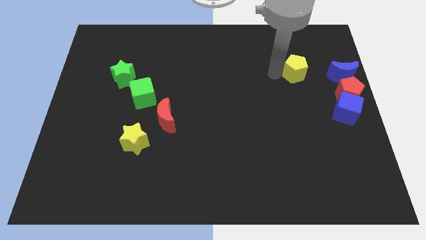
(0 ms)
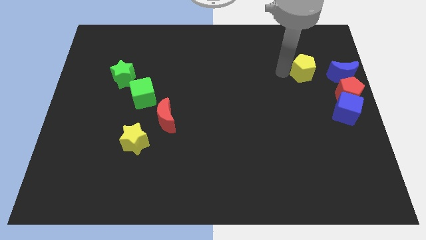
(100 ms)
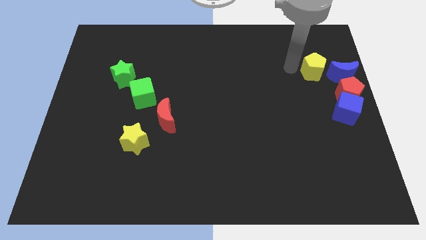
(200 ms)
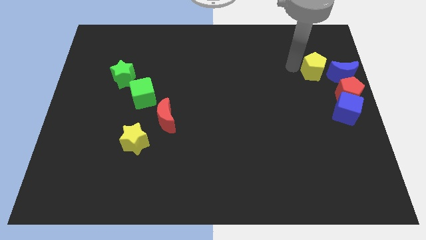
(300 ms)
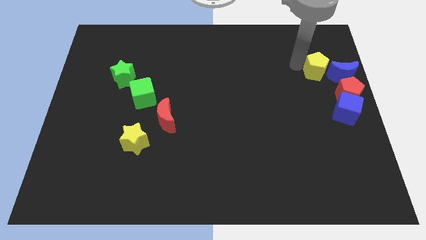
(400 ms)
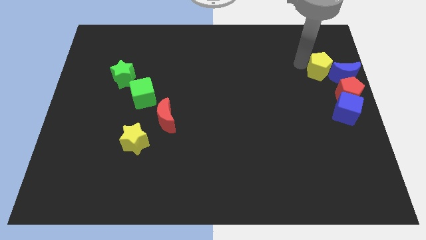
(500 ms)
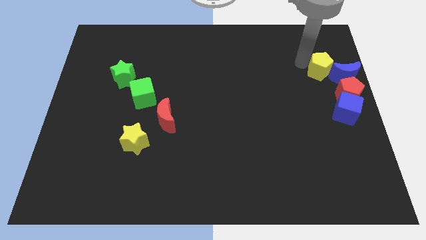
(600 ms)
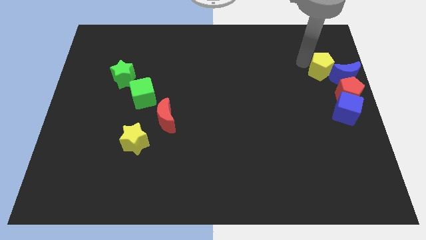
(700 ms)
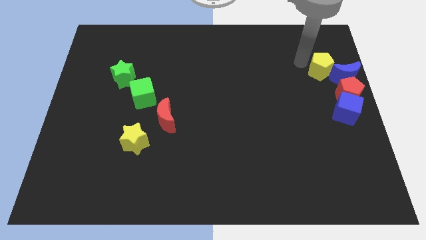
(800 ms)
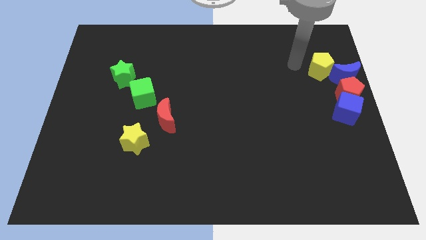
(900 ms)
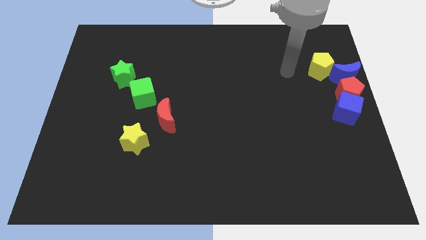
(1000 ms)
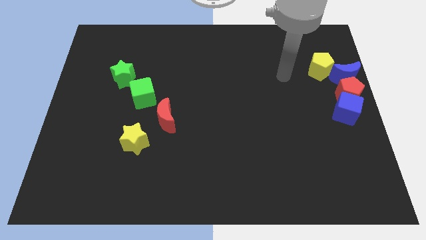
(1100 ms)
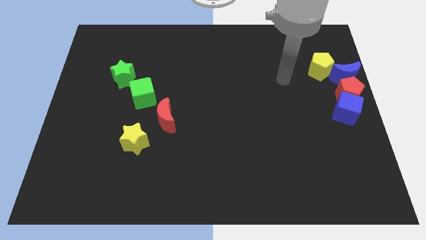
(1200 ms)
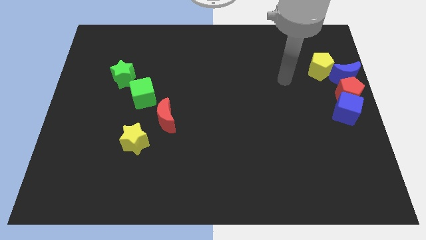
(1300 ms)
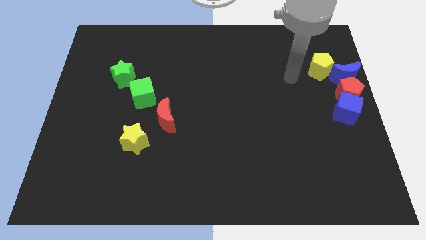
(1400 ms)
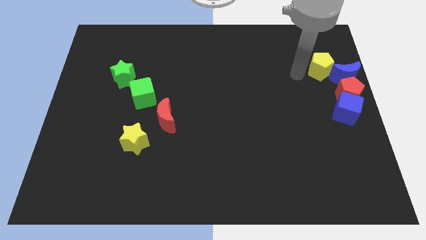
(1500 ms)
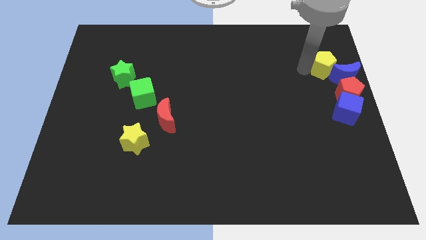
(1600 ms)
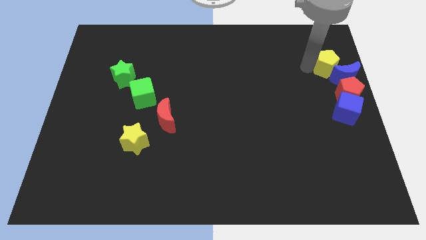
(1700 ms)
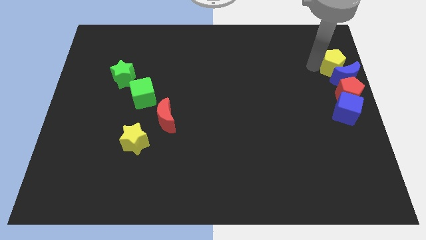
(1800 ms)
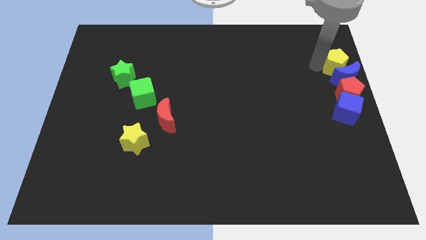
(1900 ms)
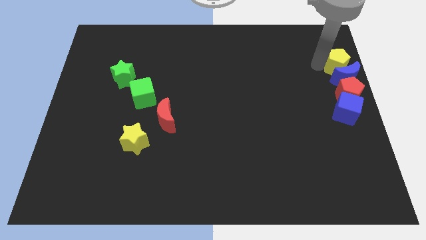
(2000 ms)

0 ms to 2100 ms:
push the yellow pentagon to the top side of the blue crescent

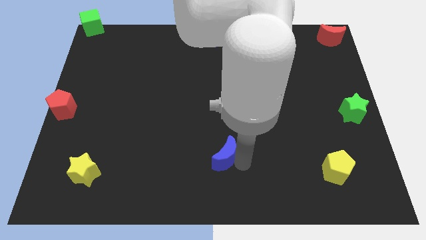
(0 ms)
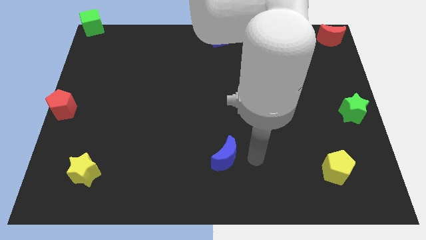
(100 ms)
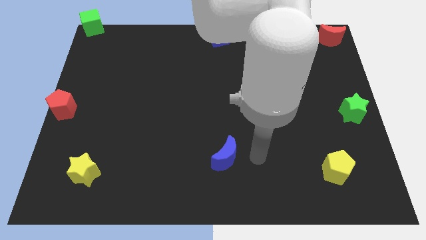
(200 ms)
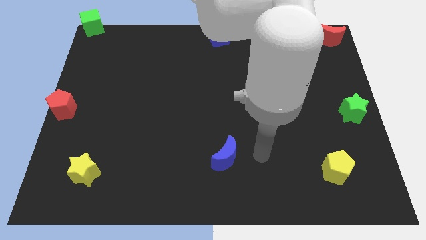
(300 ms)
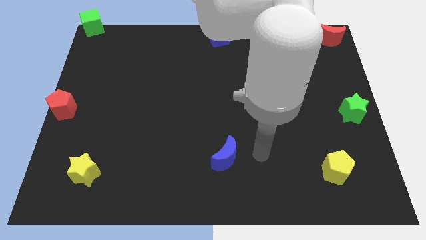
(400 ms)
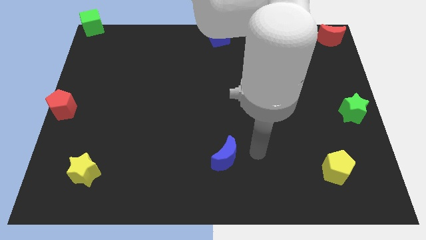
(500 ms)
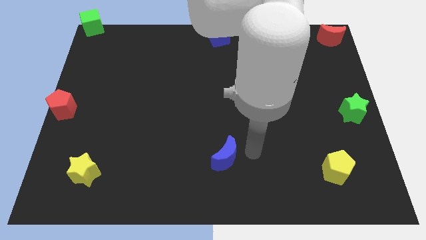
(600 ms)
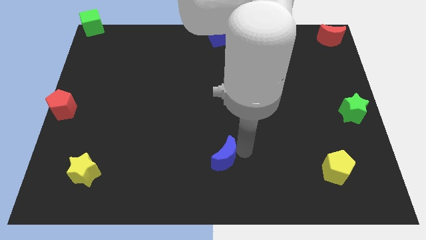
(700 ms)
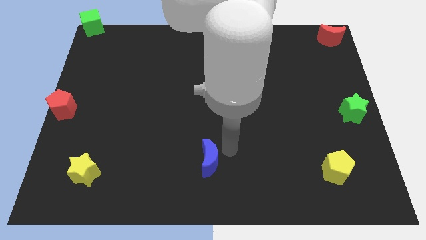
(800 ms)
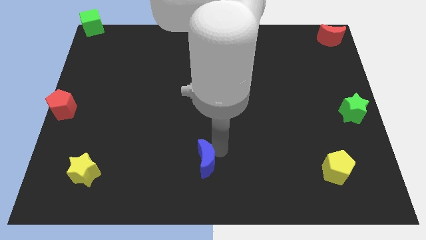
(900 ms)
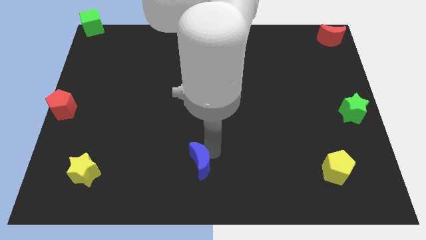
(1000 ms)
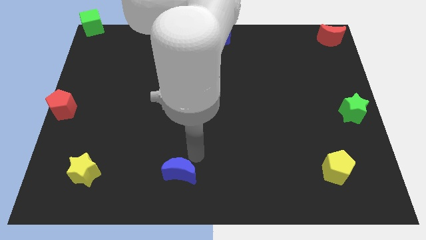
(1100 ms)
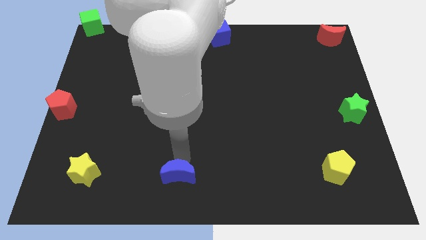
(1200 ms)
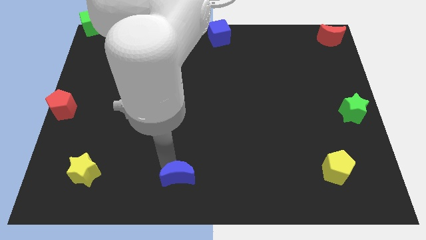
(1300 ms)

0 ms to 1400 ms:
push the blue crescent horizontally to the right side of the yellow star

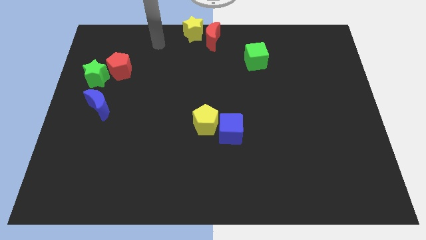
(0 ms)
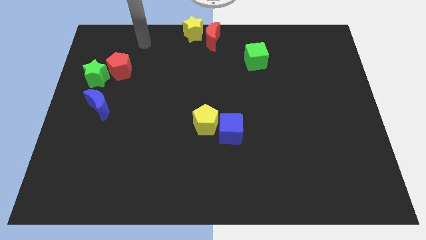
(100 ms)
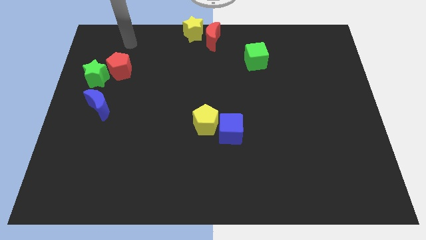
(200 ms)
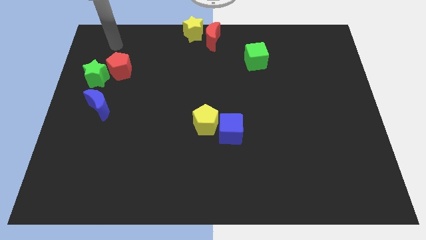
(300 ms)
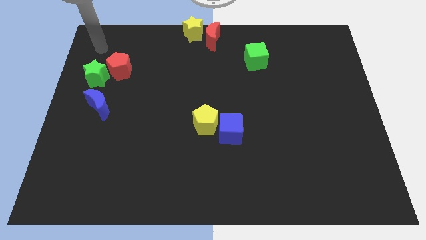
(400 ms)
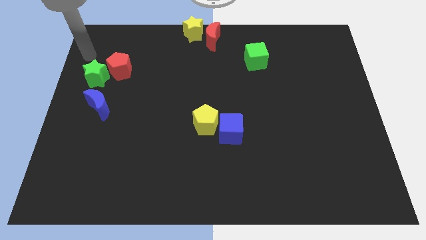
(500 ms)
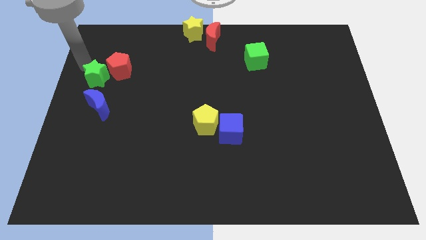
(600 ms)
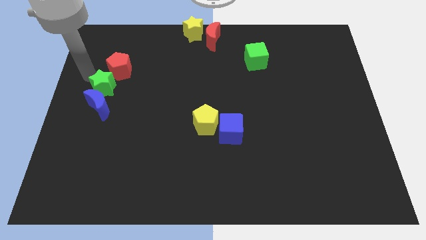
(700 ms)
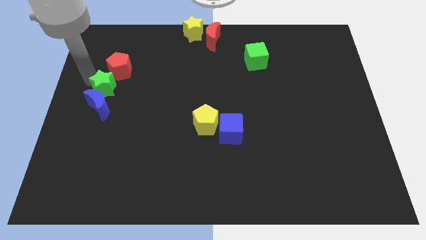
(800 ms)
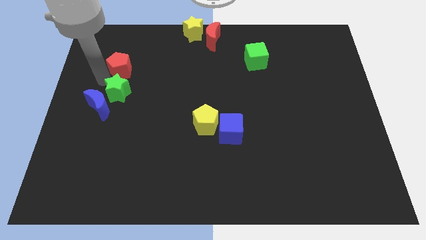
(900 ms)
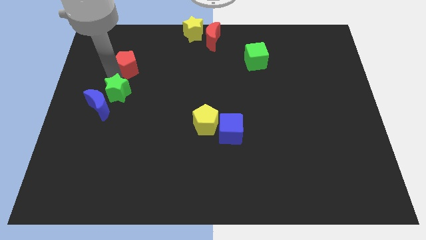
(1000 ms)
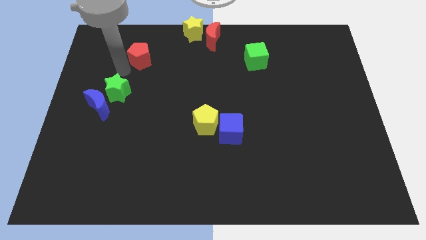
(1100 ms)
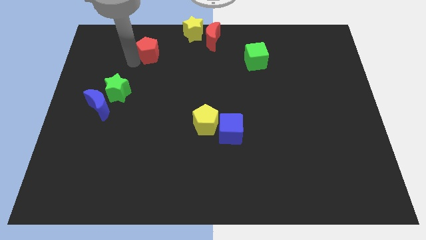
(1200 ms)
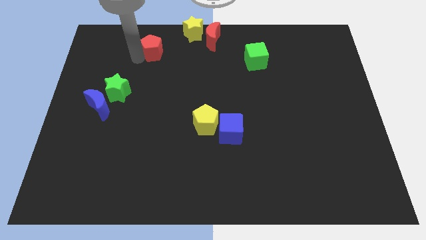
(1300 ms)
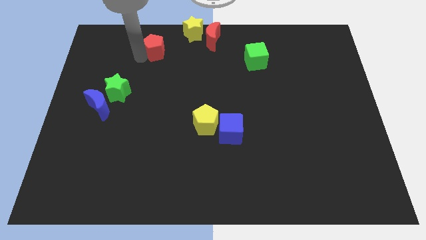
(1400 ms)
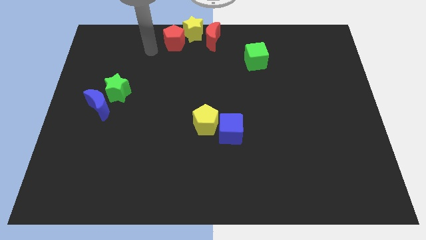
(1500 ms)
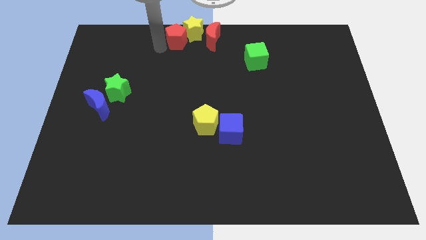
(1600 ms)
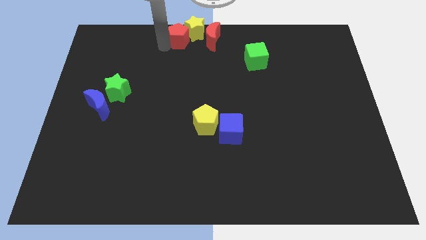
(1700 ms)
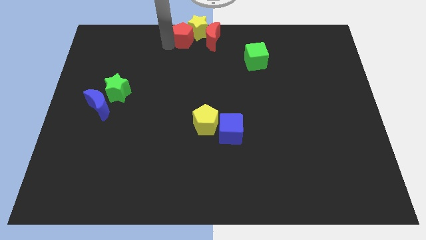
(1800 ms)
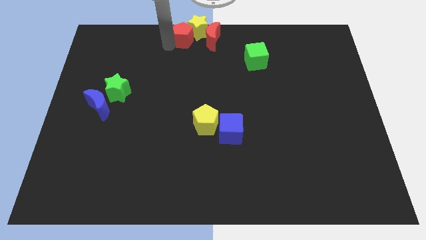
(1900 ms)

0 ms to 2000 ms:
separate the red pentagon from green star

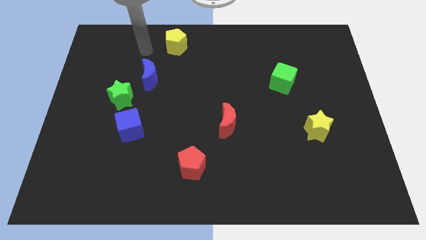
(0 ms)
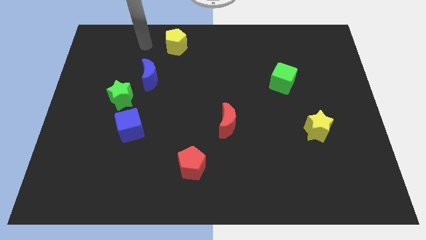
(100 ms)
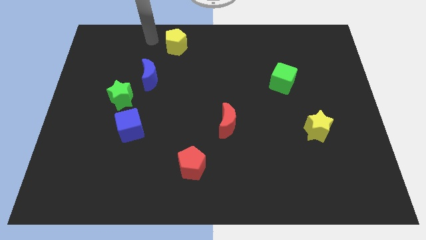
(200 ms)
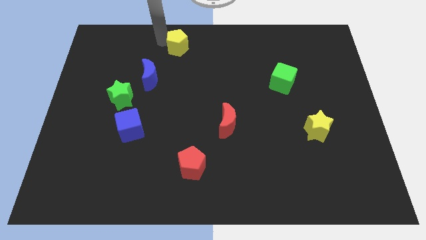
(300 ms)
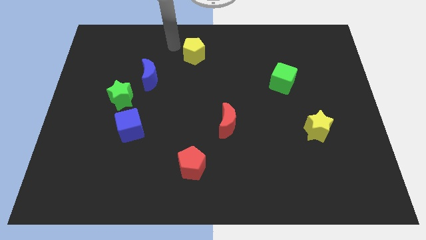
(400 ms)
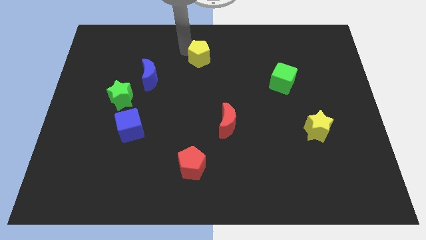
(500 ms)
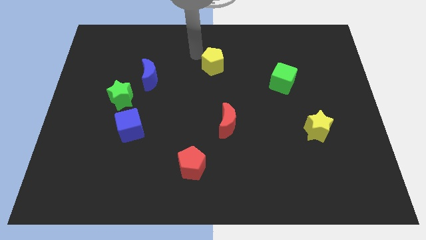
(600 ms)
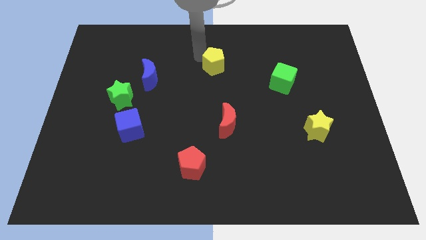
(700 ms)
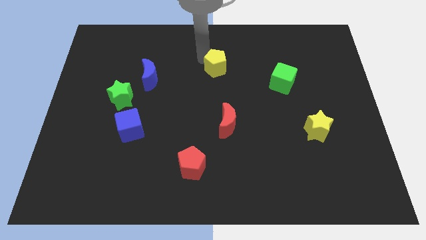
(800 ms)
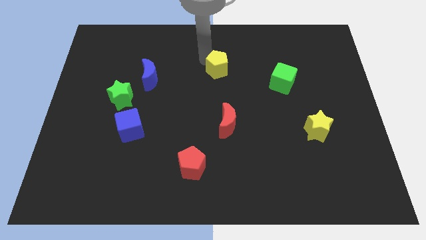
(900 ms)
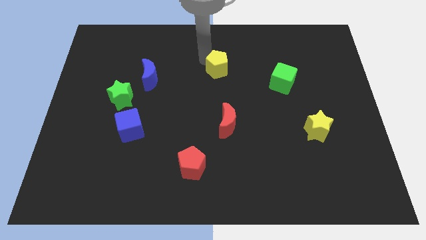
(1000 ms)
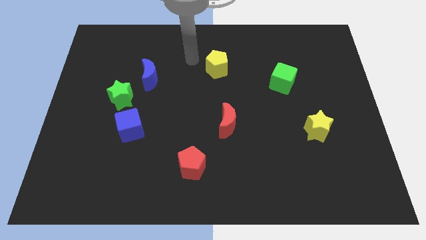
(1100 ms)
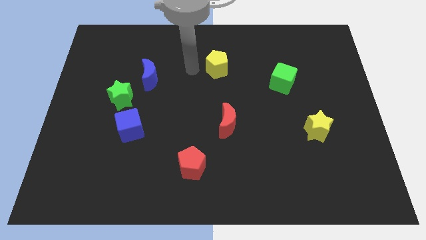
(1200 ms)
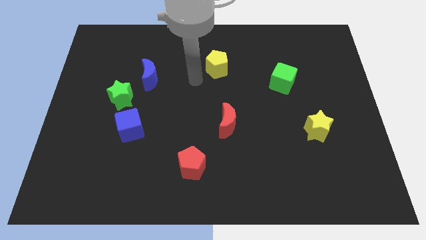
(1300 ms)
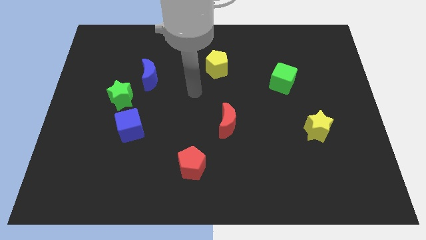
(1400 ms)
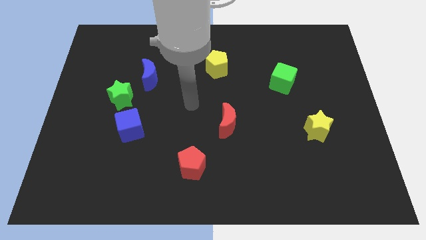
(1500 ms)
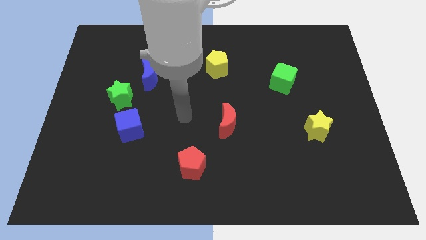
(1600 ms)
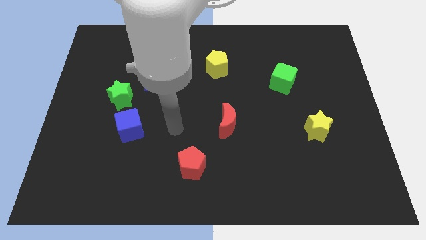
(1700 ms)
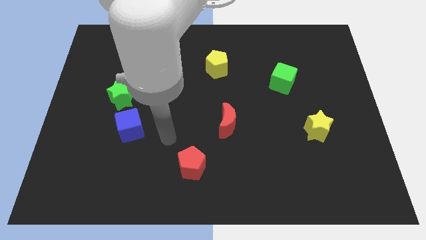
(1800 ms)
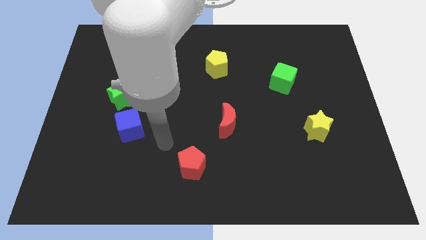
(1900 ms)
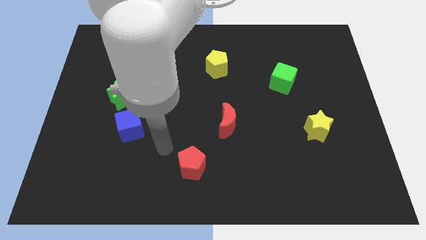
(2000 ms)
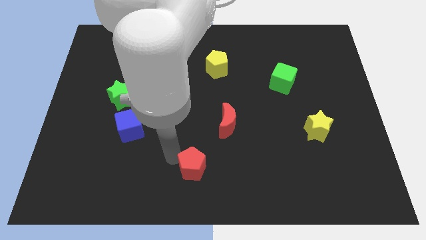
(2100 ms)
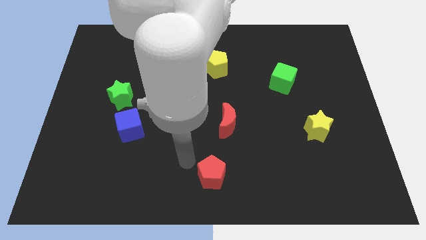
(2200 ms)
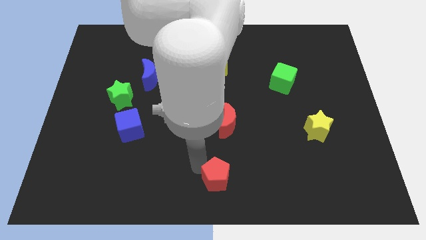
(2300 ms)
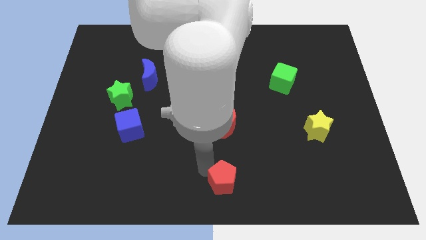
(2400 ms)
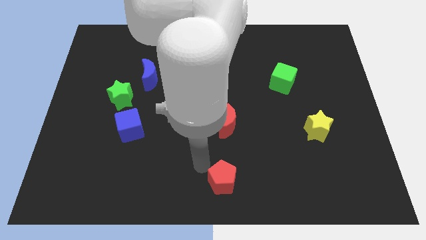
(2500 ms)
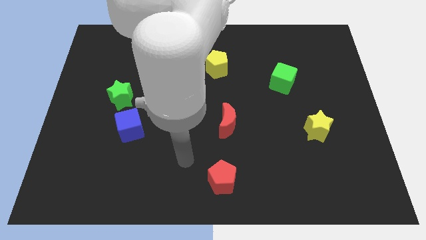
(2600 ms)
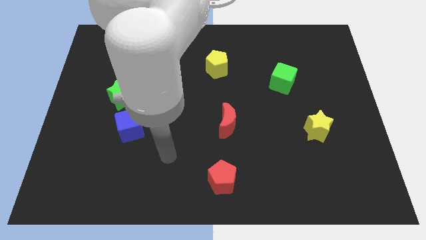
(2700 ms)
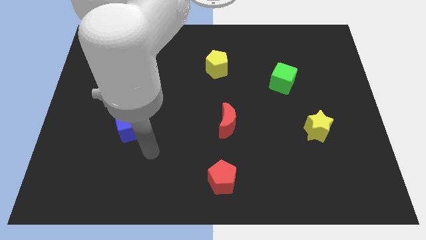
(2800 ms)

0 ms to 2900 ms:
move the red pentagon towards bottom center

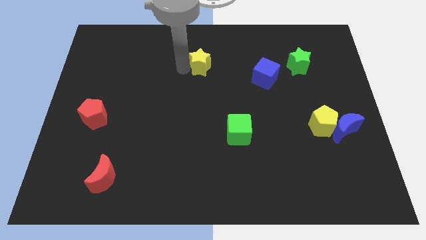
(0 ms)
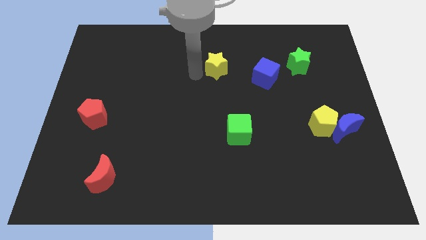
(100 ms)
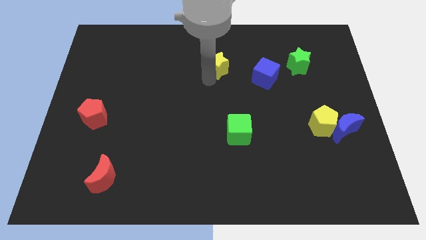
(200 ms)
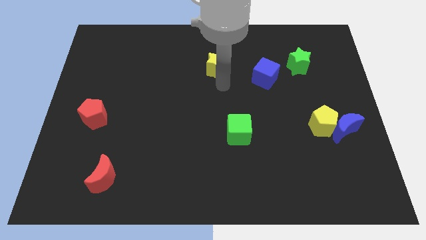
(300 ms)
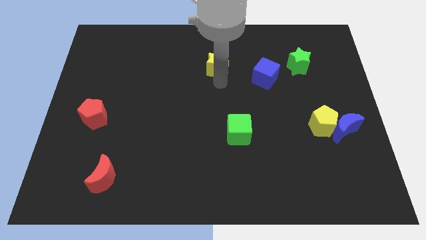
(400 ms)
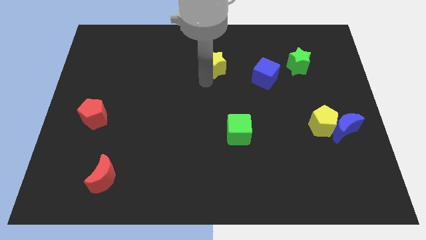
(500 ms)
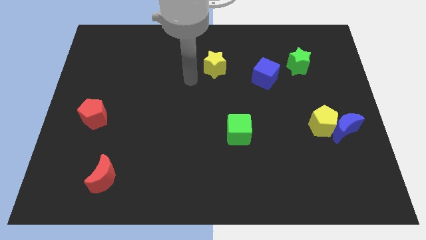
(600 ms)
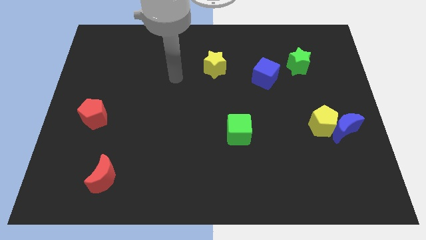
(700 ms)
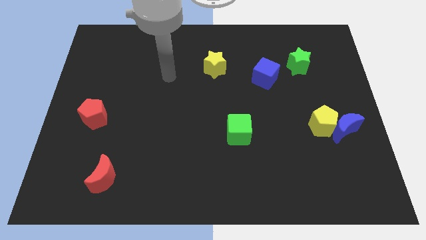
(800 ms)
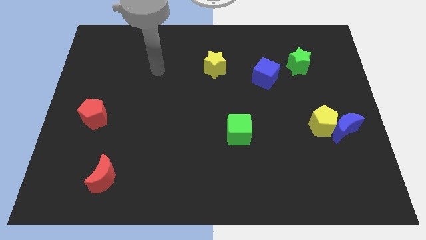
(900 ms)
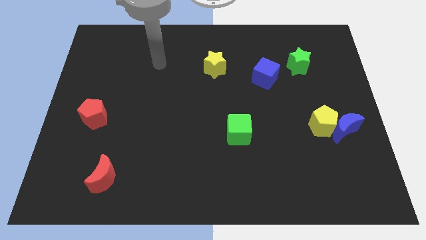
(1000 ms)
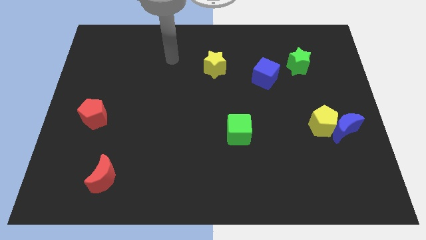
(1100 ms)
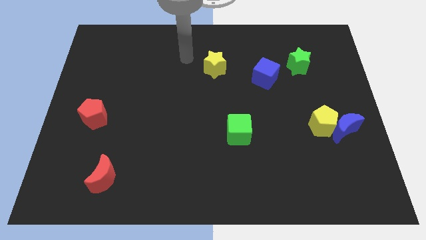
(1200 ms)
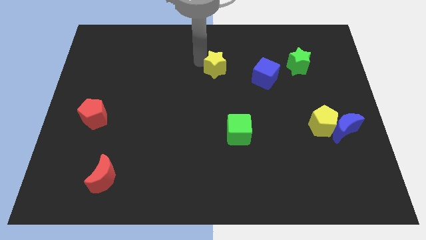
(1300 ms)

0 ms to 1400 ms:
place your arm to the left of yellow star
